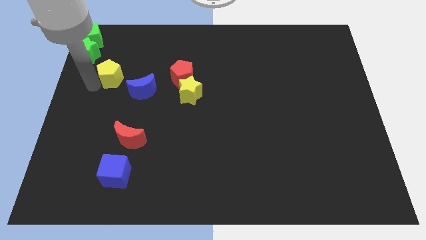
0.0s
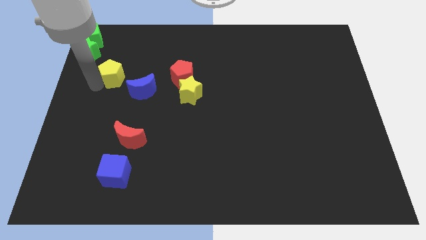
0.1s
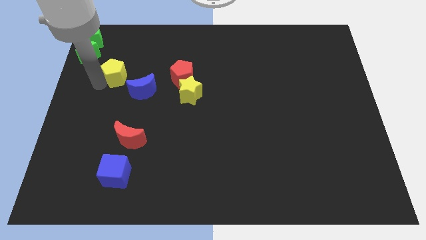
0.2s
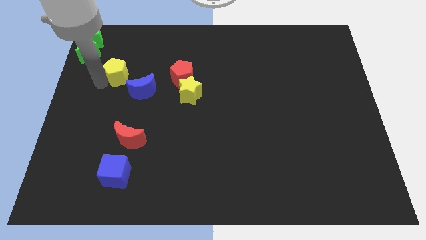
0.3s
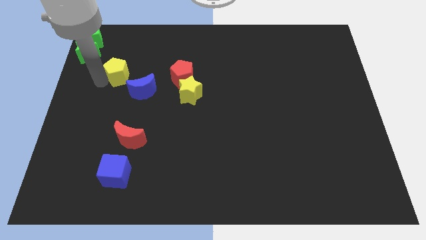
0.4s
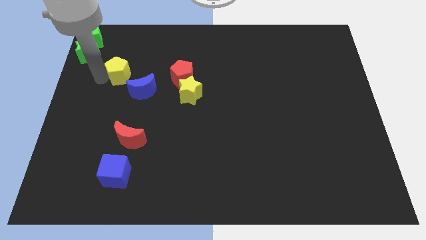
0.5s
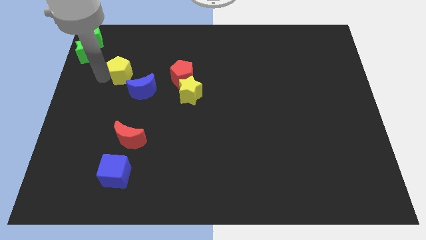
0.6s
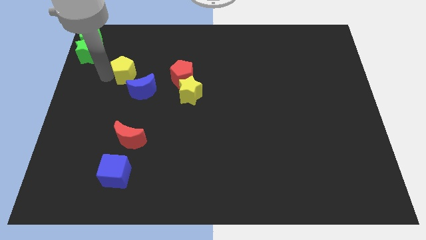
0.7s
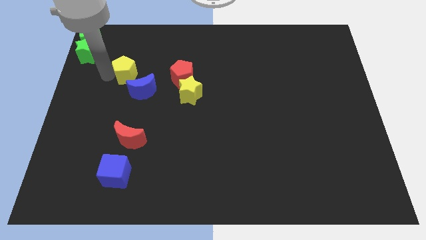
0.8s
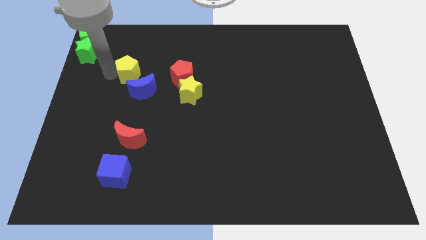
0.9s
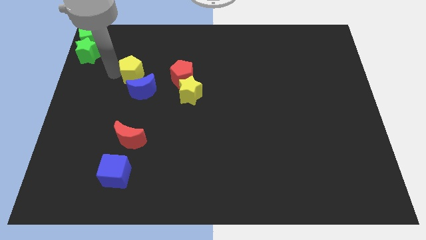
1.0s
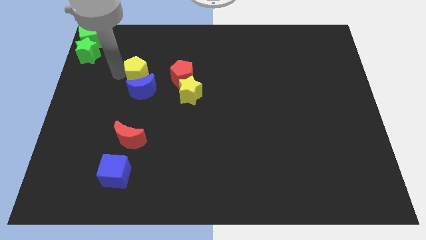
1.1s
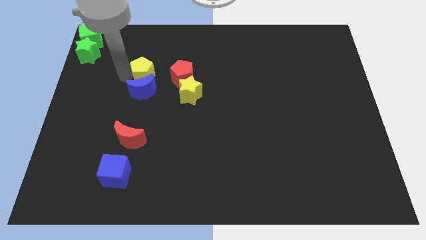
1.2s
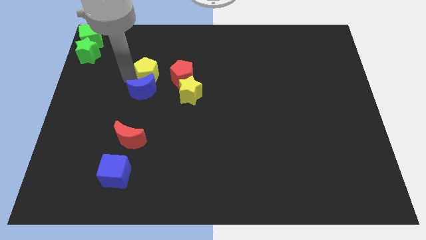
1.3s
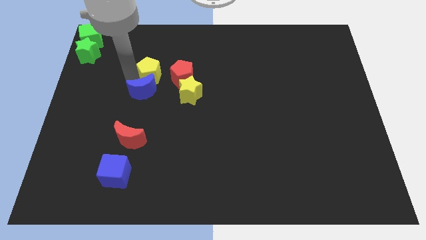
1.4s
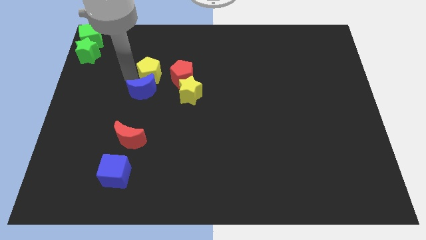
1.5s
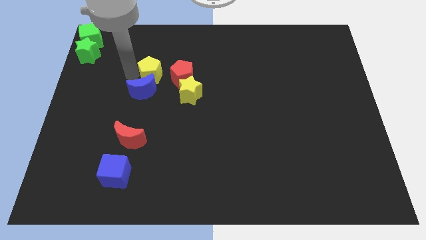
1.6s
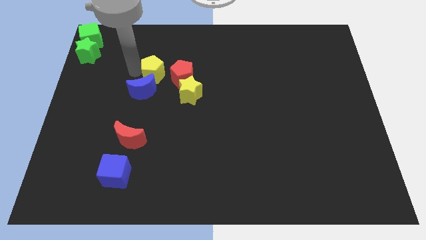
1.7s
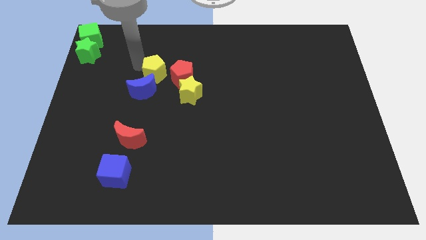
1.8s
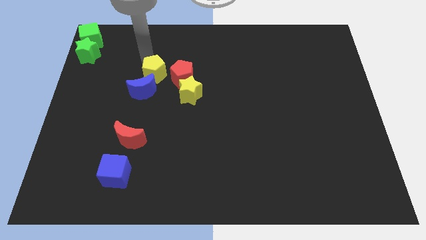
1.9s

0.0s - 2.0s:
drag the yellow pentagon the top of the blue crescent

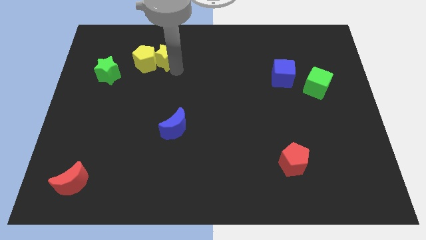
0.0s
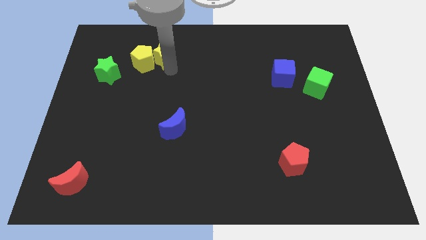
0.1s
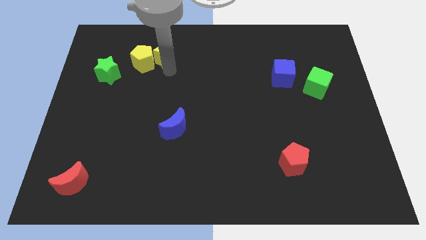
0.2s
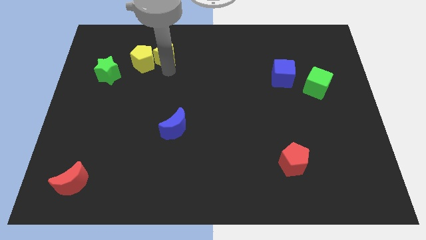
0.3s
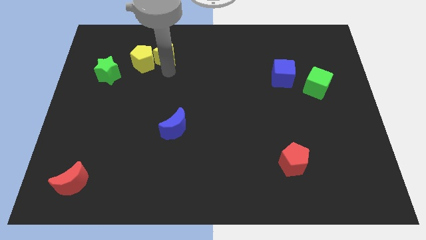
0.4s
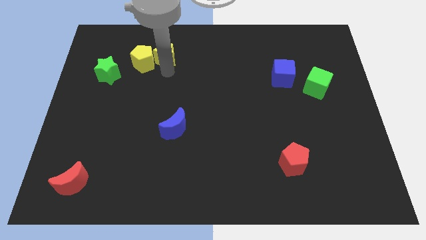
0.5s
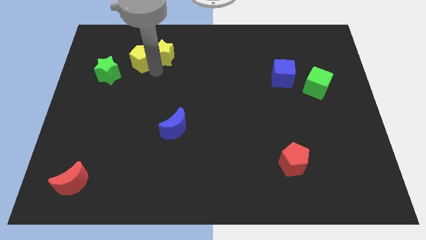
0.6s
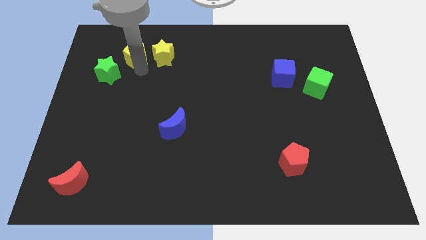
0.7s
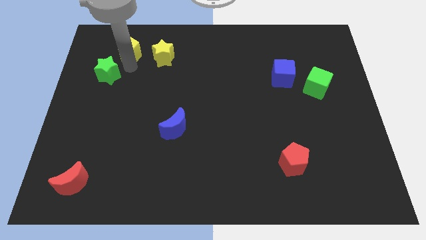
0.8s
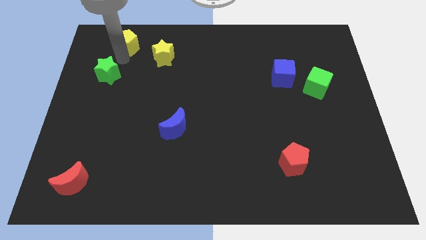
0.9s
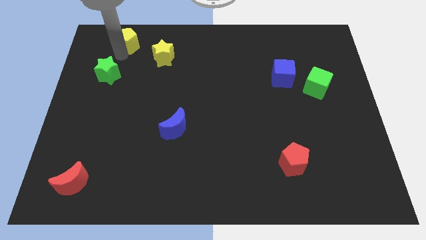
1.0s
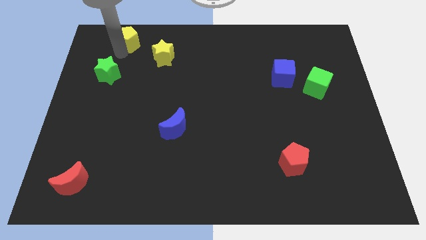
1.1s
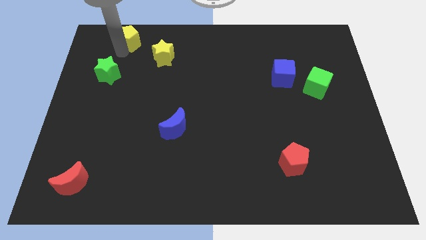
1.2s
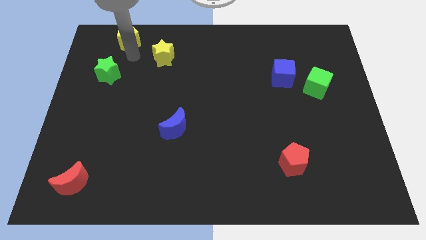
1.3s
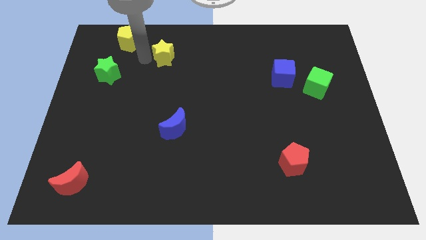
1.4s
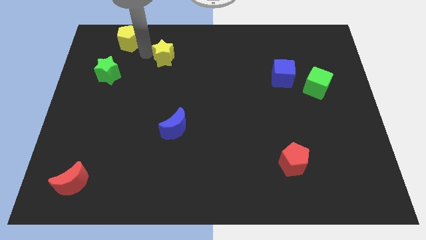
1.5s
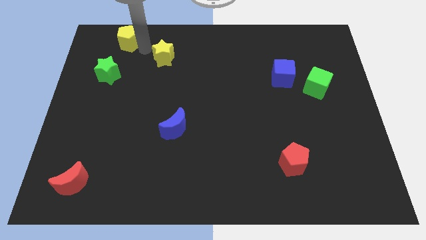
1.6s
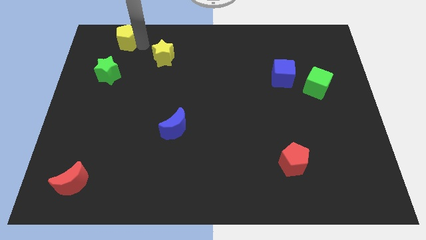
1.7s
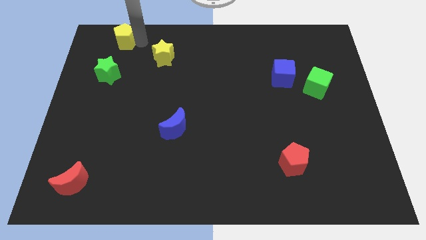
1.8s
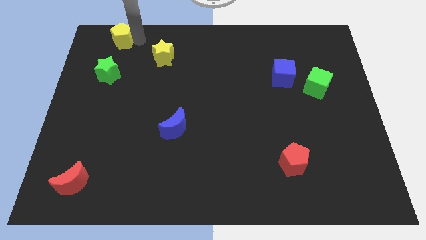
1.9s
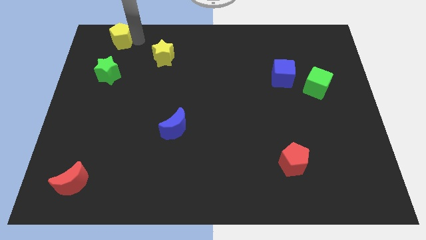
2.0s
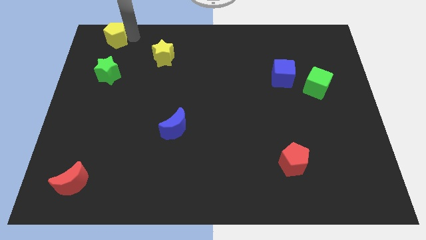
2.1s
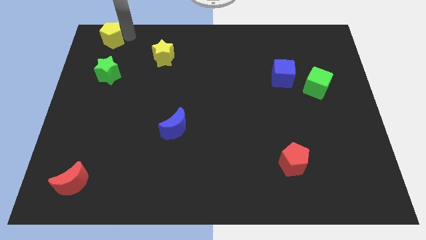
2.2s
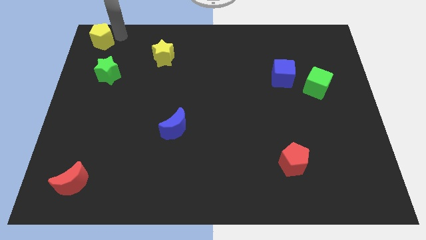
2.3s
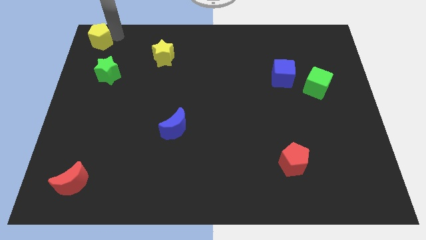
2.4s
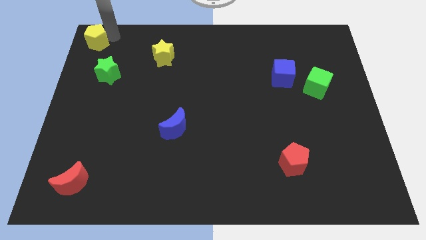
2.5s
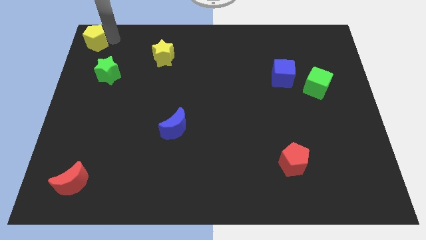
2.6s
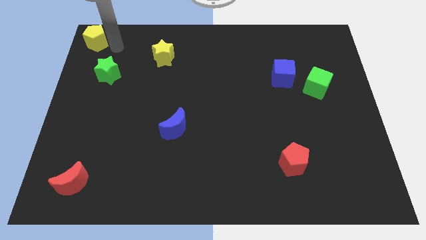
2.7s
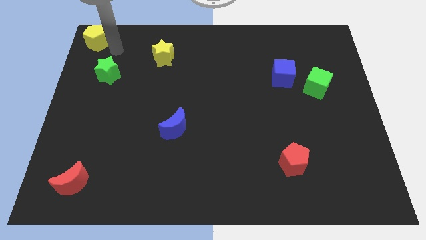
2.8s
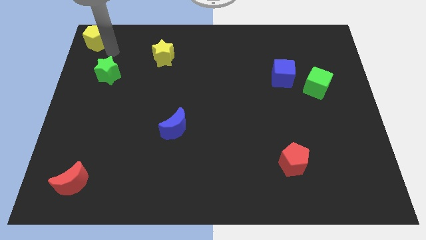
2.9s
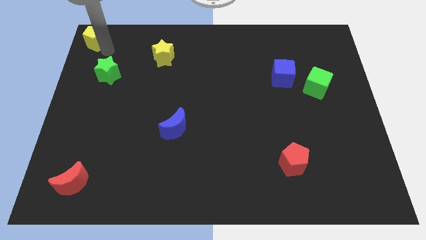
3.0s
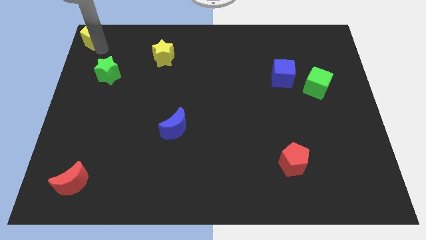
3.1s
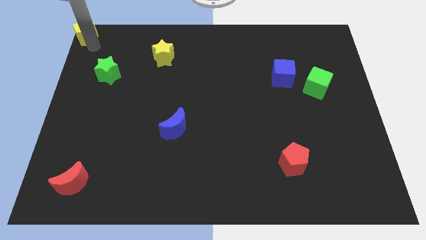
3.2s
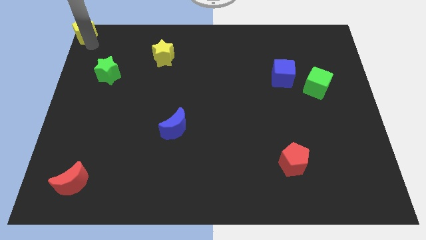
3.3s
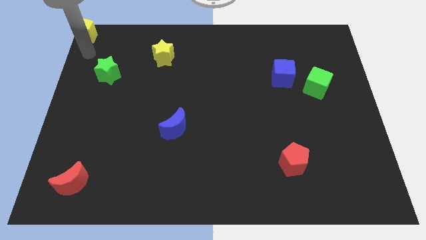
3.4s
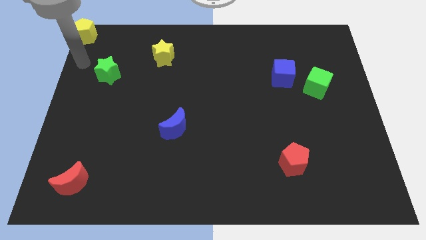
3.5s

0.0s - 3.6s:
push the yellow pentagon to the top left to the board

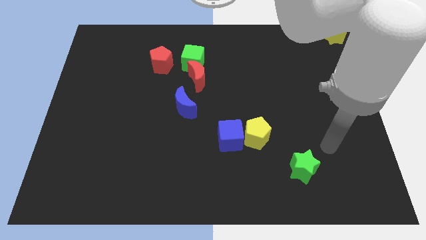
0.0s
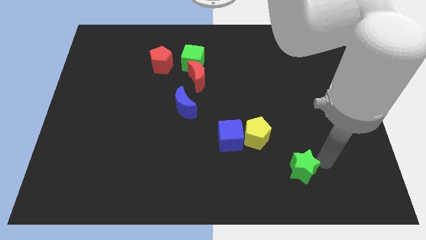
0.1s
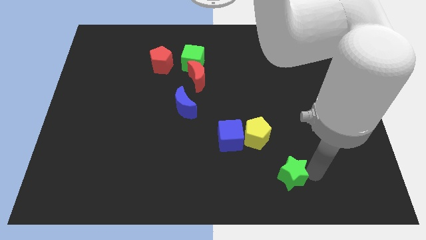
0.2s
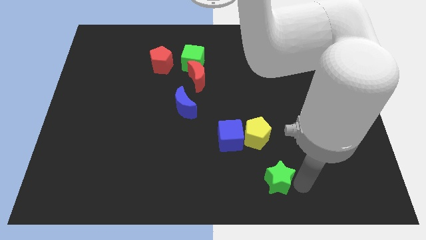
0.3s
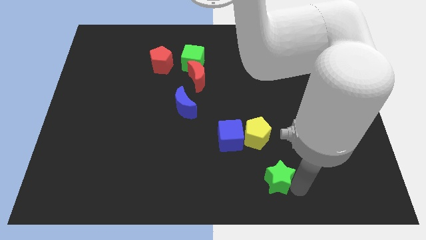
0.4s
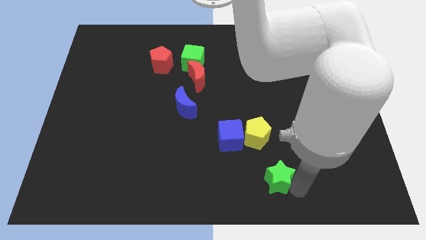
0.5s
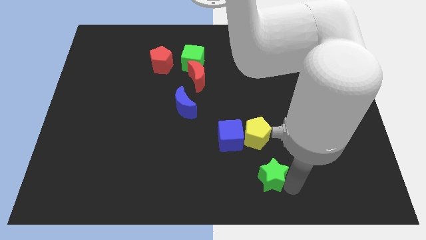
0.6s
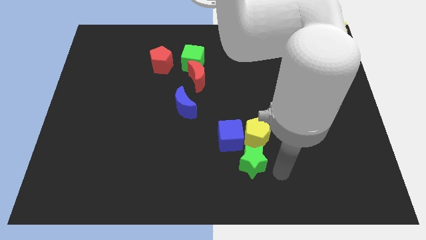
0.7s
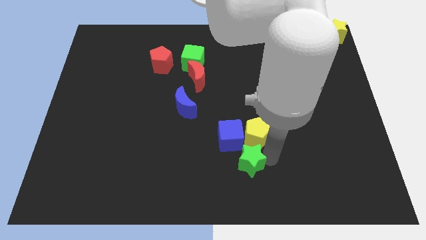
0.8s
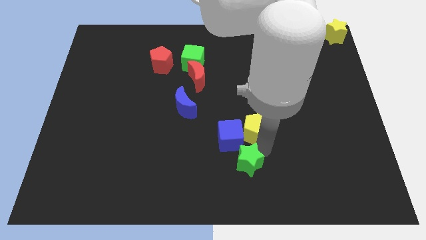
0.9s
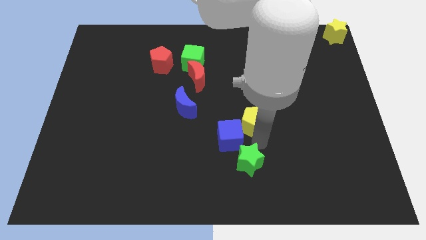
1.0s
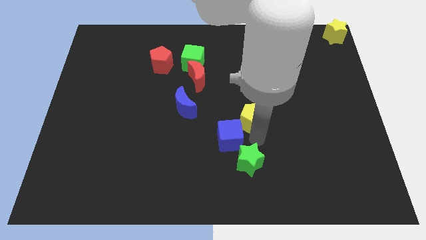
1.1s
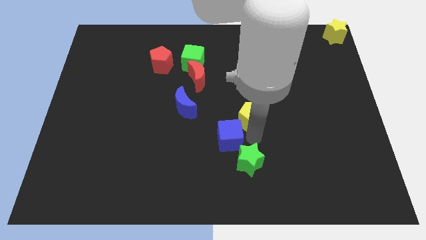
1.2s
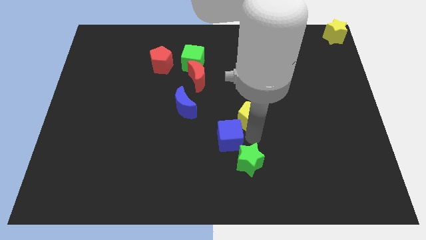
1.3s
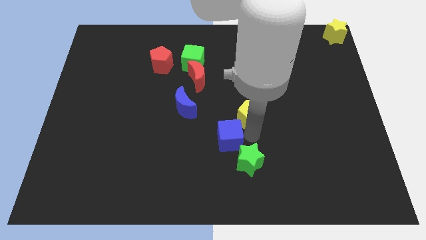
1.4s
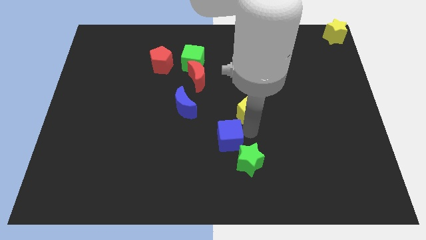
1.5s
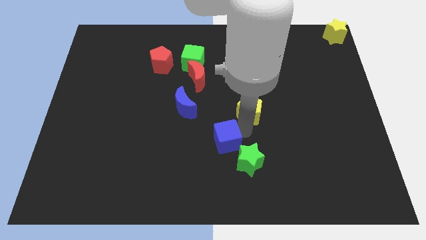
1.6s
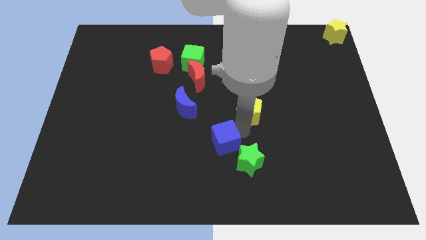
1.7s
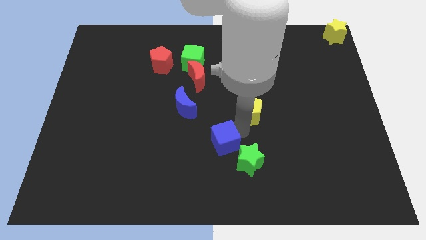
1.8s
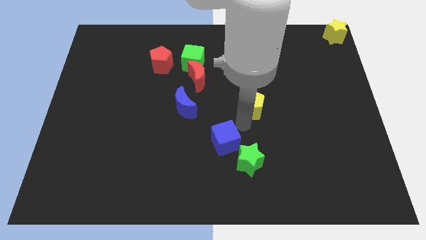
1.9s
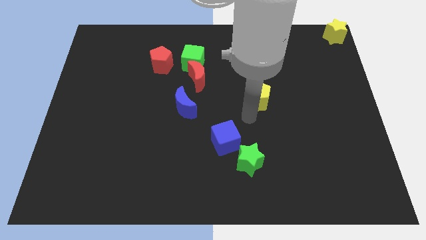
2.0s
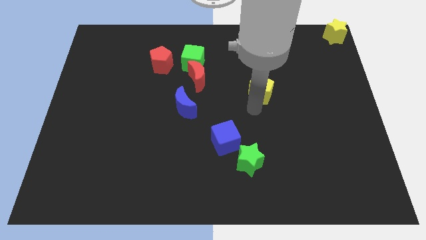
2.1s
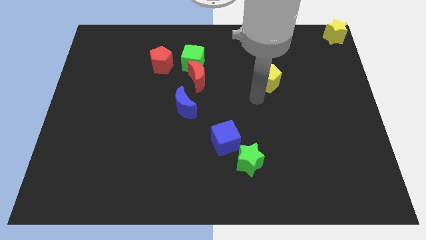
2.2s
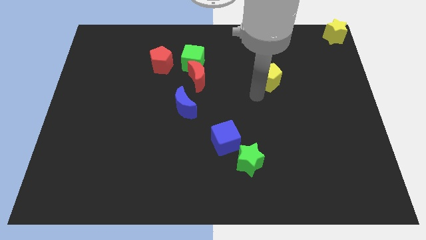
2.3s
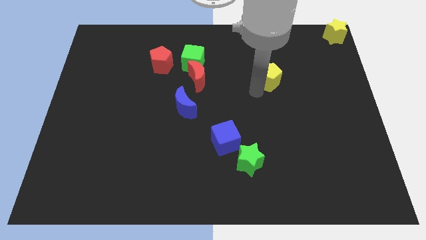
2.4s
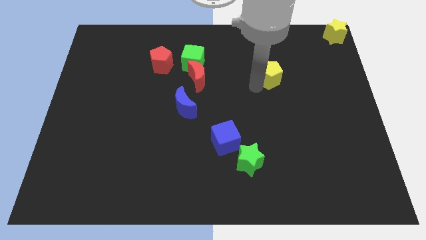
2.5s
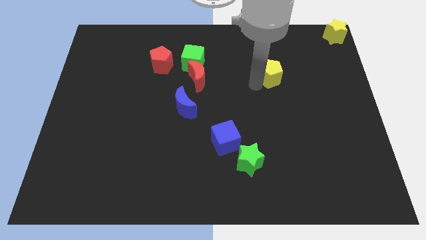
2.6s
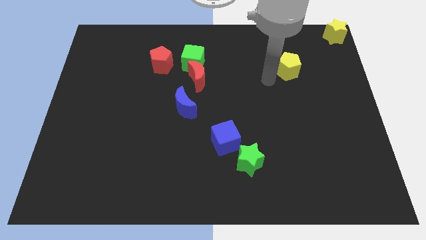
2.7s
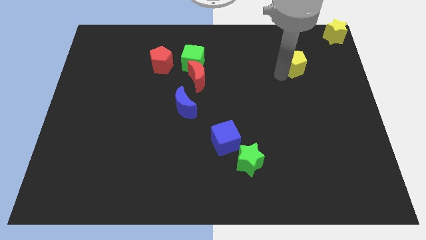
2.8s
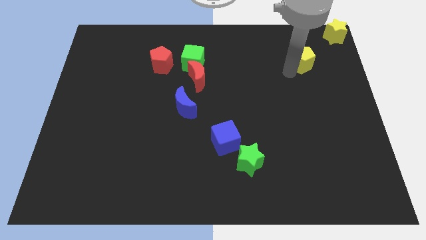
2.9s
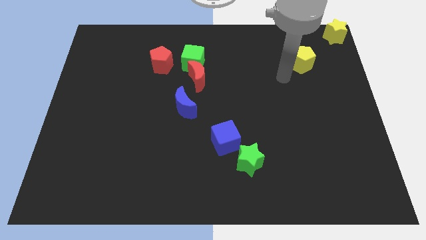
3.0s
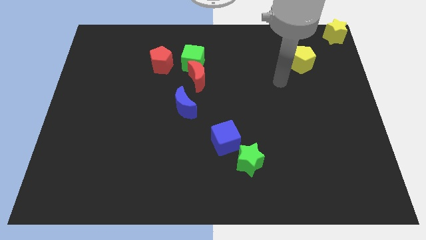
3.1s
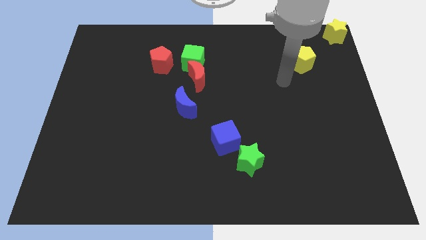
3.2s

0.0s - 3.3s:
separate the yellow pentagon from a group of blocks

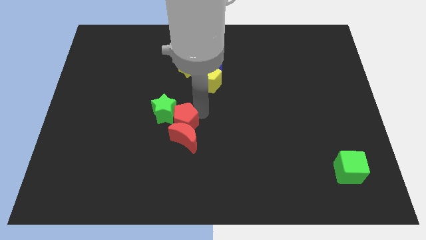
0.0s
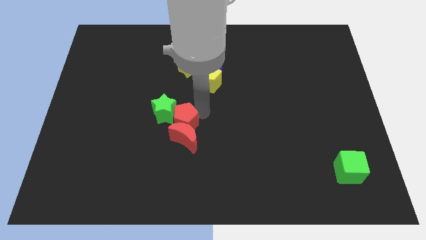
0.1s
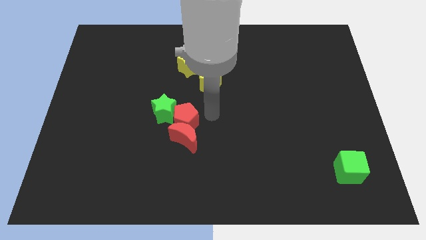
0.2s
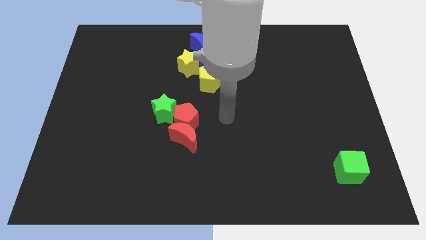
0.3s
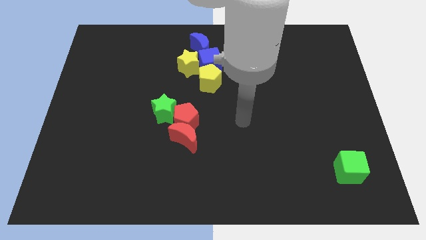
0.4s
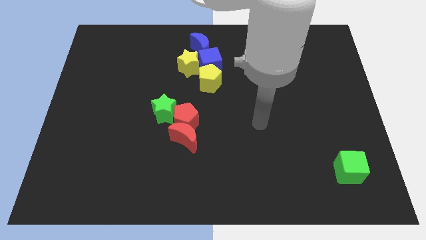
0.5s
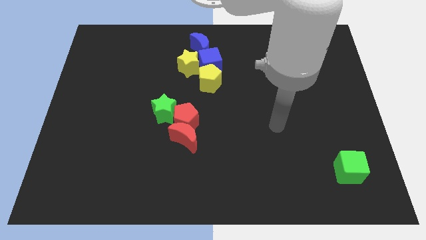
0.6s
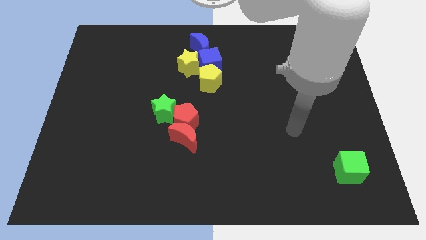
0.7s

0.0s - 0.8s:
move the arm towards the green cube
